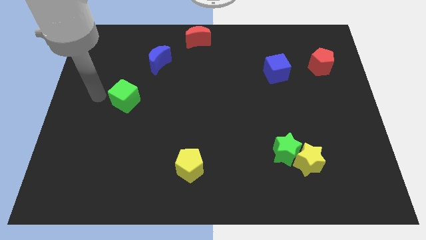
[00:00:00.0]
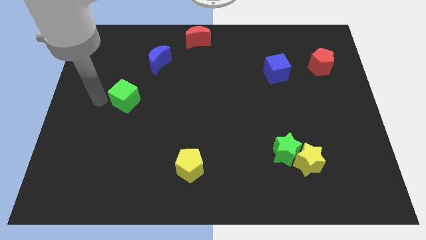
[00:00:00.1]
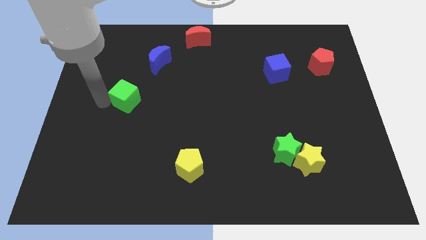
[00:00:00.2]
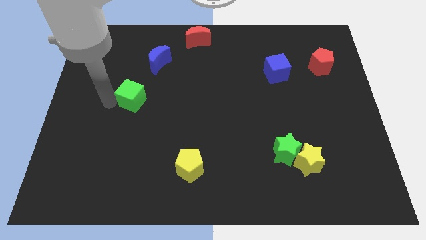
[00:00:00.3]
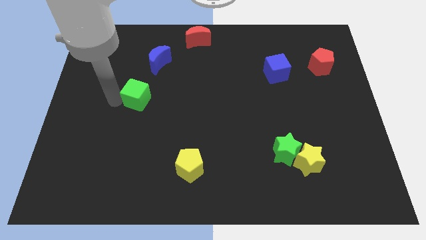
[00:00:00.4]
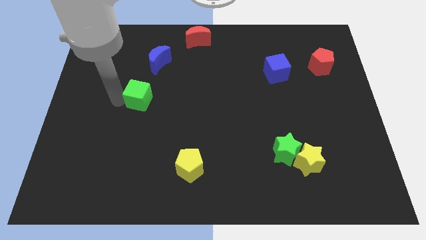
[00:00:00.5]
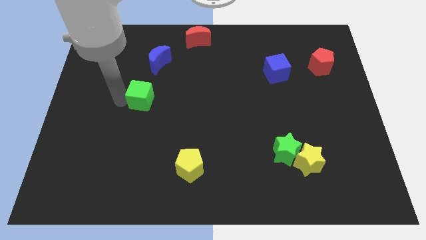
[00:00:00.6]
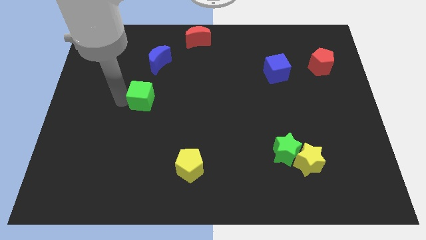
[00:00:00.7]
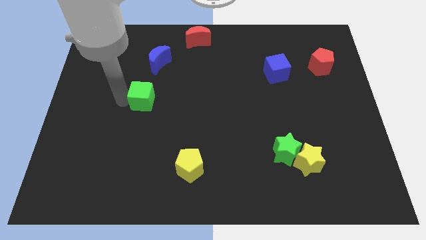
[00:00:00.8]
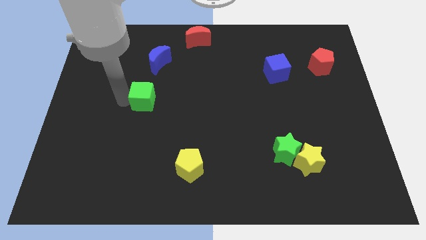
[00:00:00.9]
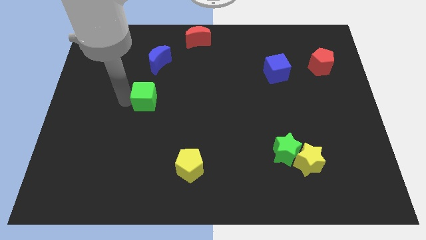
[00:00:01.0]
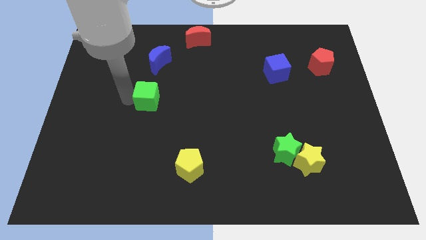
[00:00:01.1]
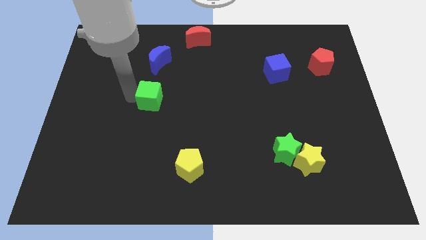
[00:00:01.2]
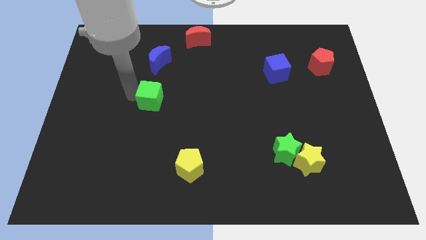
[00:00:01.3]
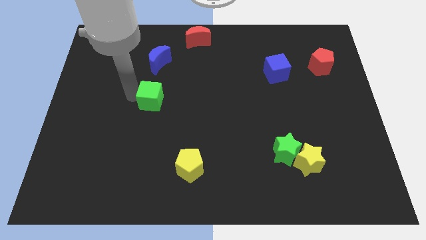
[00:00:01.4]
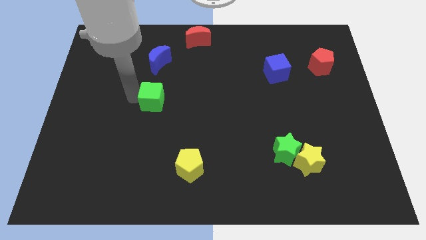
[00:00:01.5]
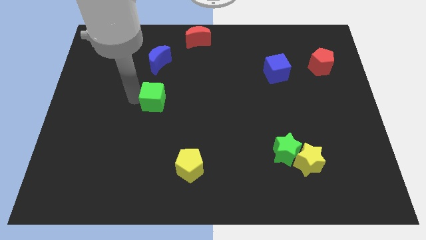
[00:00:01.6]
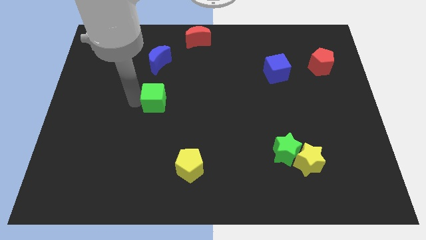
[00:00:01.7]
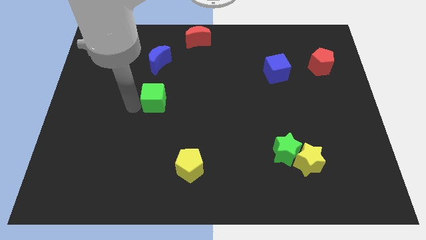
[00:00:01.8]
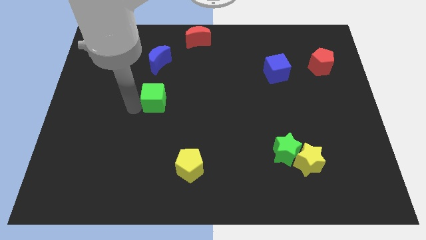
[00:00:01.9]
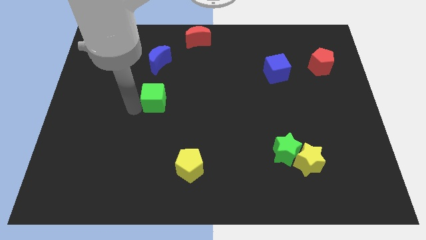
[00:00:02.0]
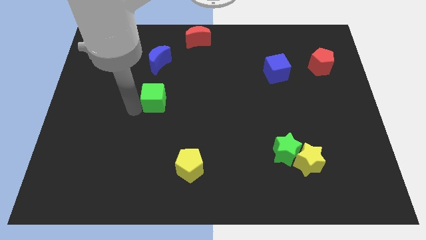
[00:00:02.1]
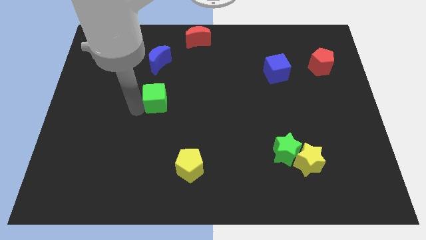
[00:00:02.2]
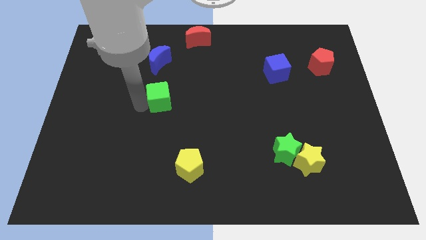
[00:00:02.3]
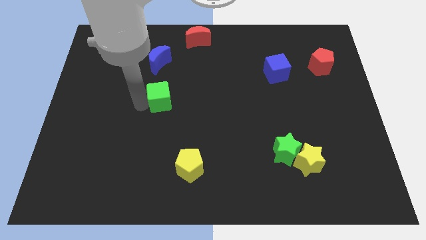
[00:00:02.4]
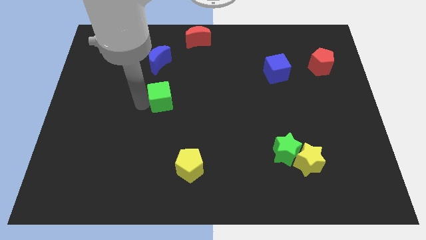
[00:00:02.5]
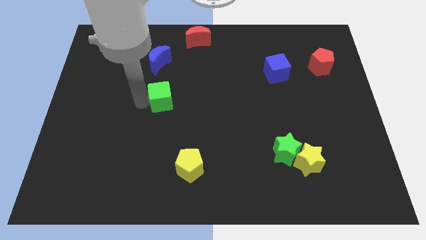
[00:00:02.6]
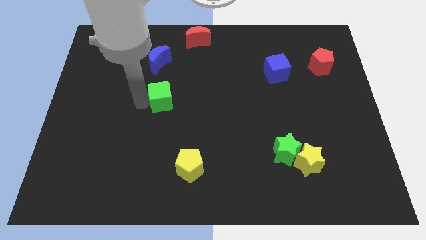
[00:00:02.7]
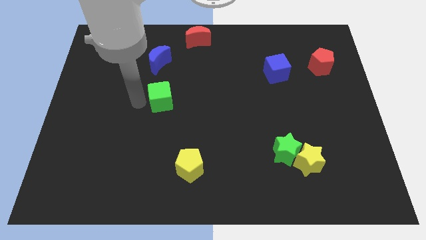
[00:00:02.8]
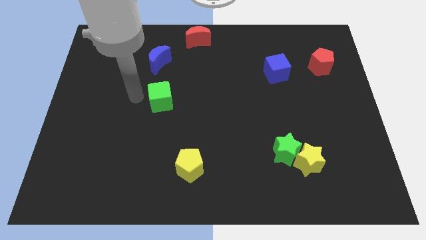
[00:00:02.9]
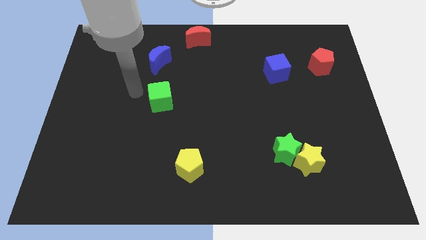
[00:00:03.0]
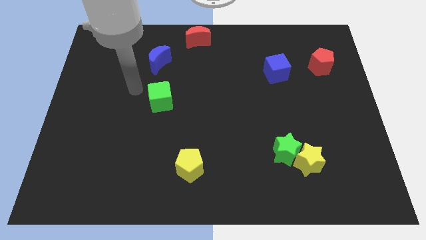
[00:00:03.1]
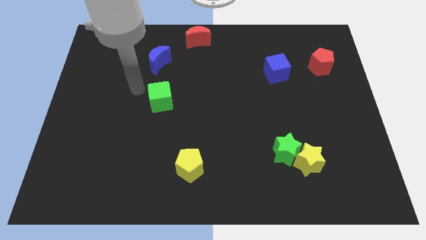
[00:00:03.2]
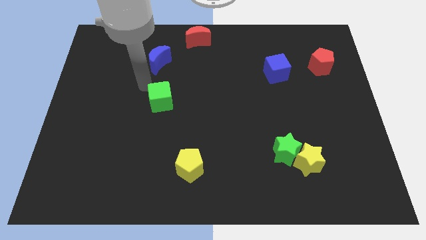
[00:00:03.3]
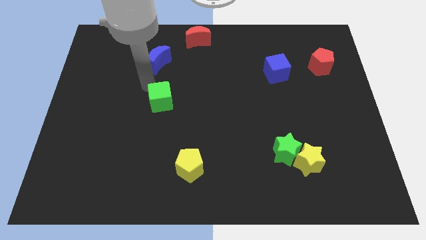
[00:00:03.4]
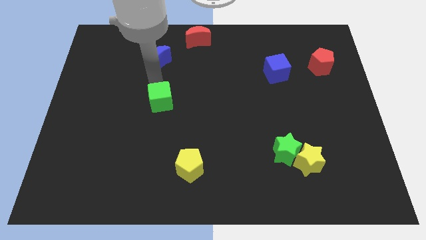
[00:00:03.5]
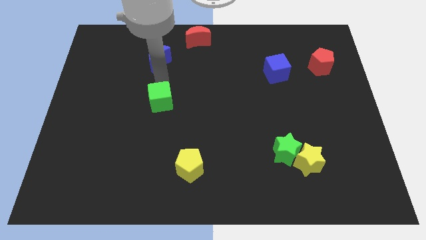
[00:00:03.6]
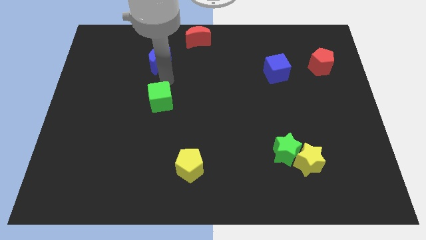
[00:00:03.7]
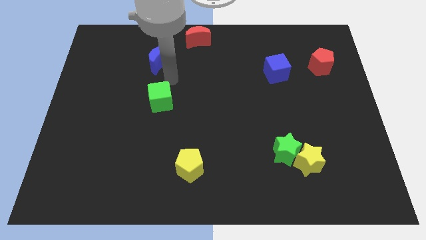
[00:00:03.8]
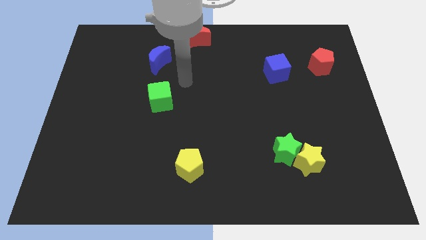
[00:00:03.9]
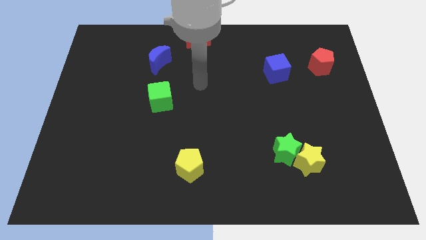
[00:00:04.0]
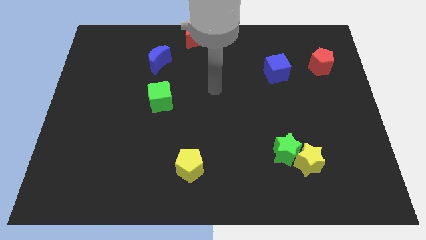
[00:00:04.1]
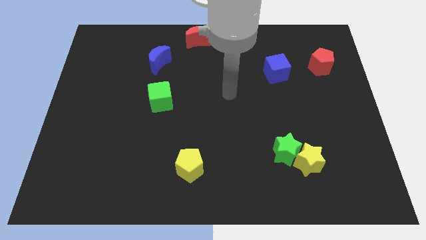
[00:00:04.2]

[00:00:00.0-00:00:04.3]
put the green cube vertically below the blue moon

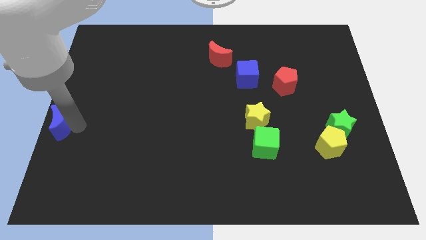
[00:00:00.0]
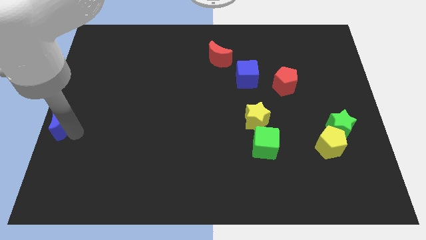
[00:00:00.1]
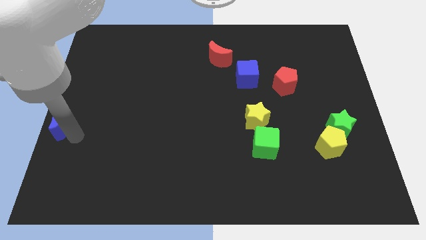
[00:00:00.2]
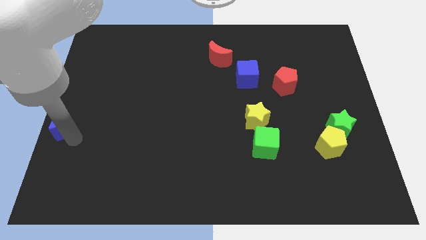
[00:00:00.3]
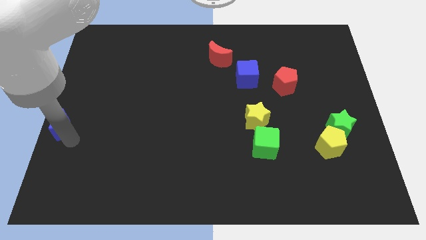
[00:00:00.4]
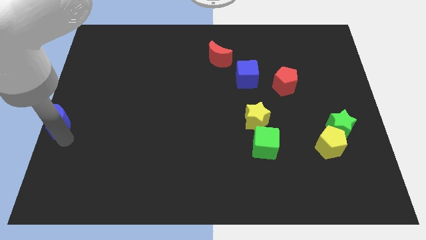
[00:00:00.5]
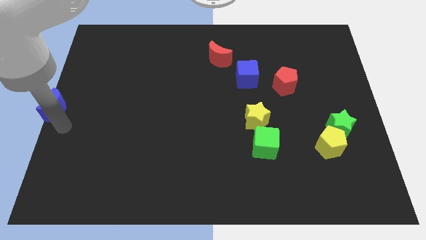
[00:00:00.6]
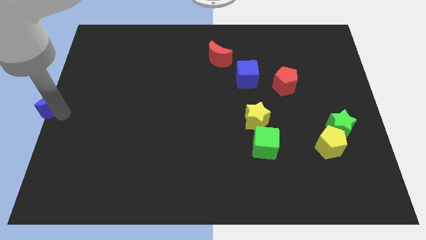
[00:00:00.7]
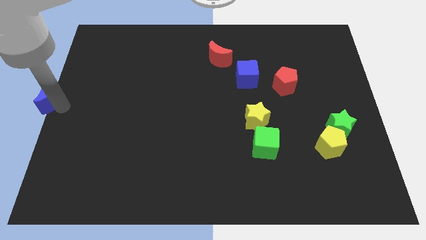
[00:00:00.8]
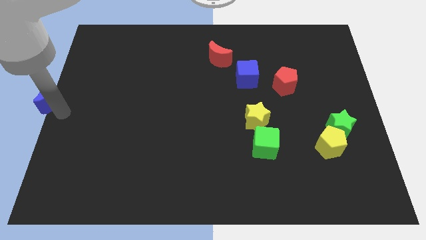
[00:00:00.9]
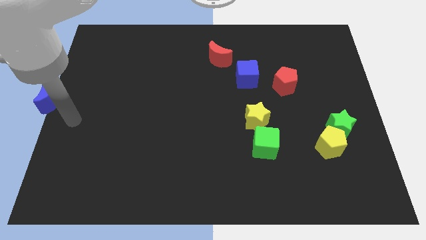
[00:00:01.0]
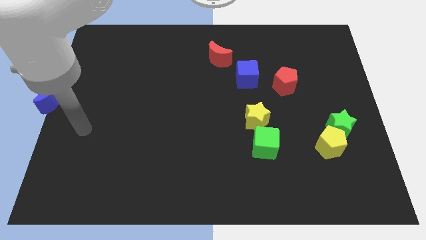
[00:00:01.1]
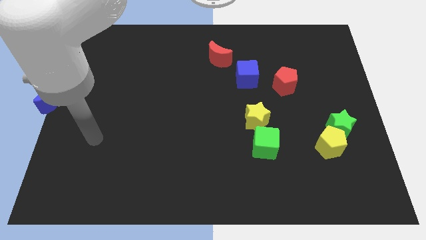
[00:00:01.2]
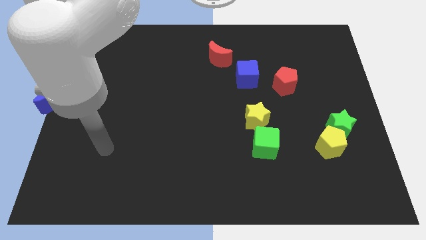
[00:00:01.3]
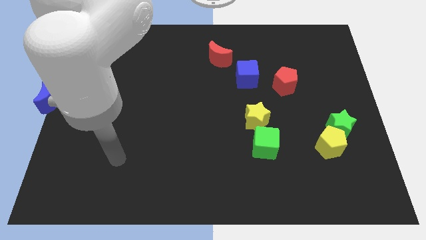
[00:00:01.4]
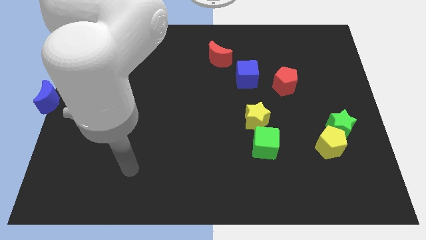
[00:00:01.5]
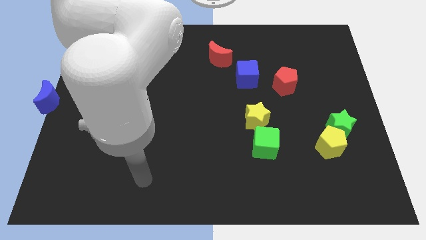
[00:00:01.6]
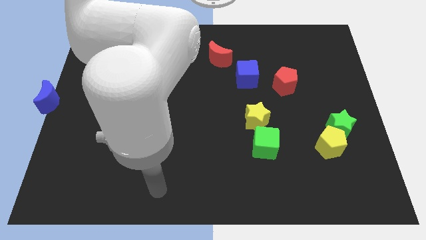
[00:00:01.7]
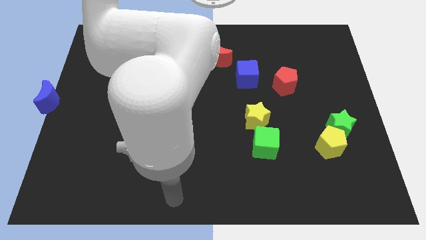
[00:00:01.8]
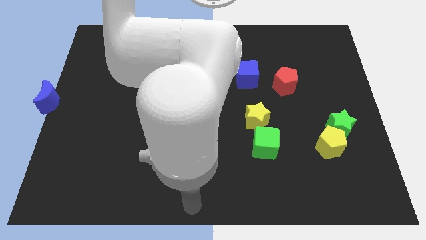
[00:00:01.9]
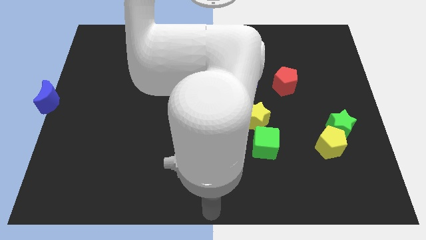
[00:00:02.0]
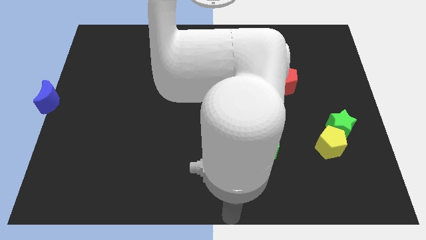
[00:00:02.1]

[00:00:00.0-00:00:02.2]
place your arm to the bottom center

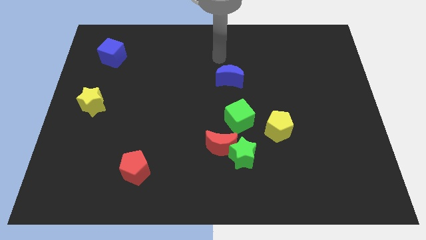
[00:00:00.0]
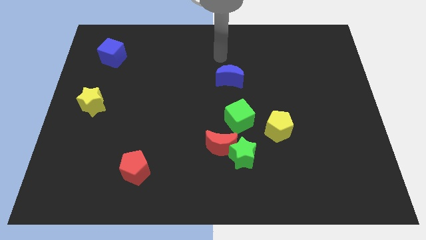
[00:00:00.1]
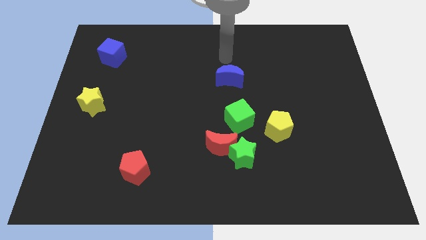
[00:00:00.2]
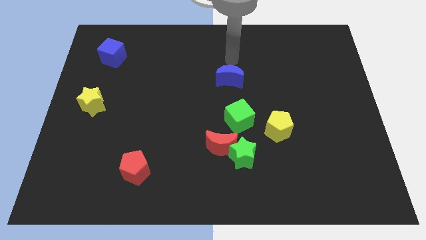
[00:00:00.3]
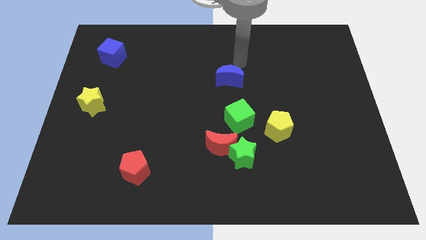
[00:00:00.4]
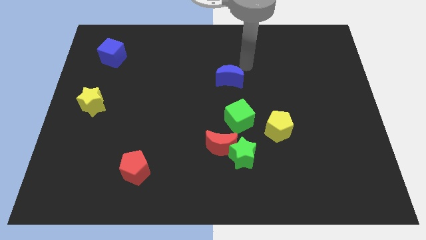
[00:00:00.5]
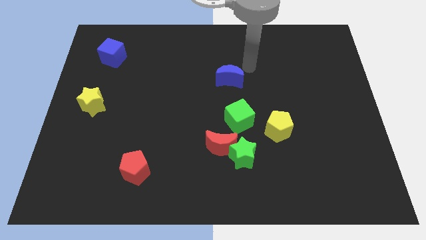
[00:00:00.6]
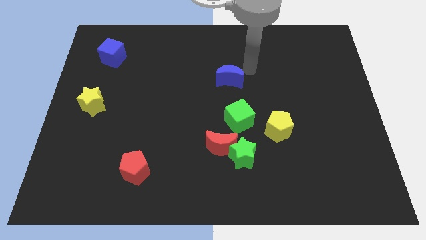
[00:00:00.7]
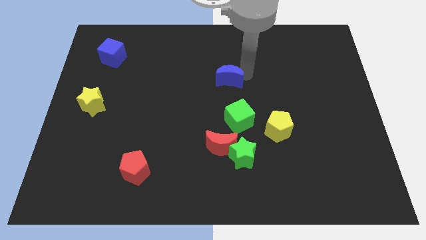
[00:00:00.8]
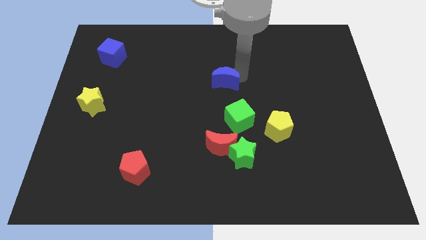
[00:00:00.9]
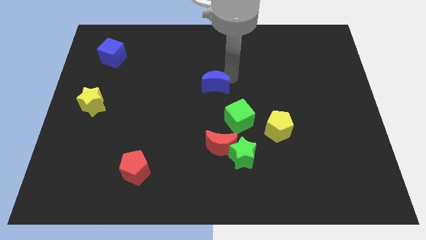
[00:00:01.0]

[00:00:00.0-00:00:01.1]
slide blue moon towards the center

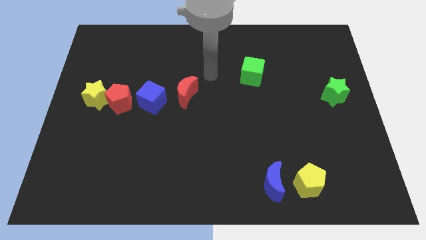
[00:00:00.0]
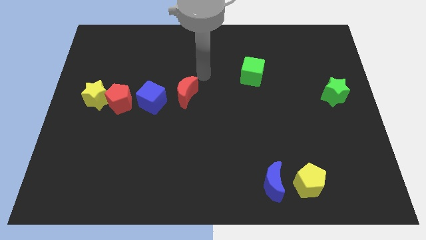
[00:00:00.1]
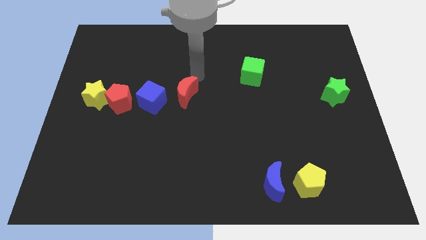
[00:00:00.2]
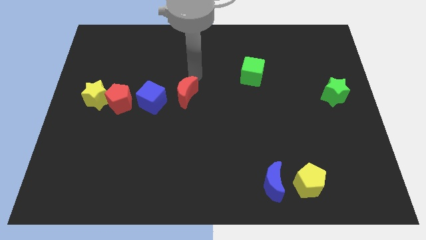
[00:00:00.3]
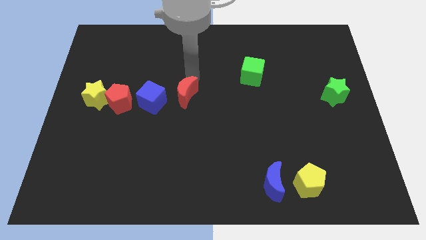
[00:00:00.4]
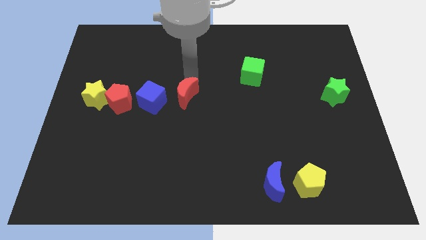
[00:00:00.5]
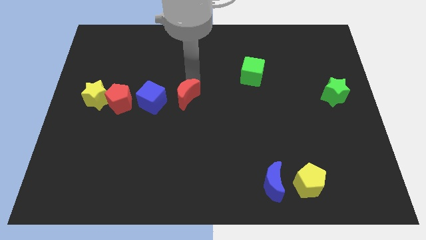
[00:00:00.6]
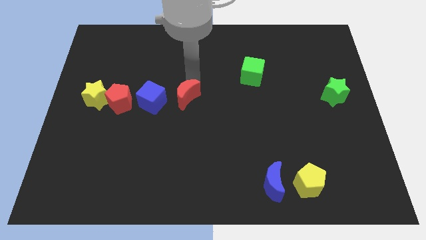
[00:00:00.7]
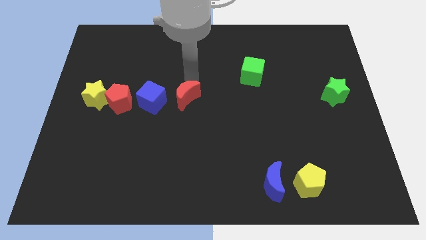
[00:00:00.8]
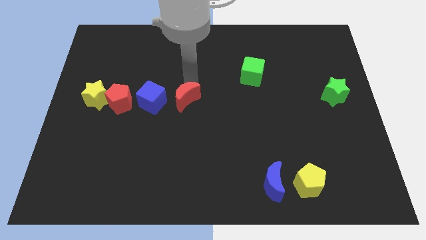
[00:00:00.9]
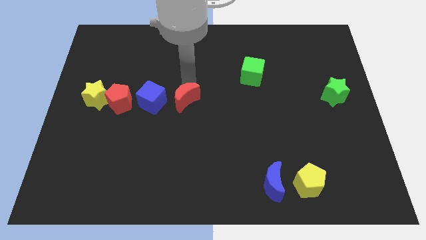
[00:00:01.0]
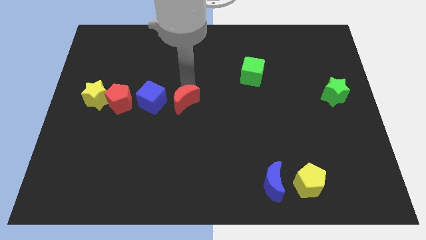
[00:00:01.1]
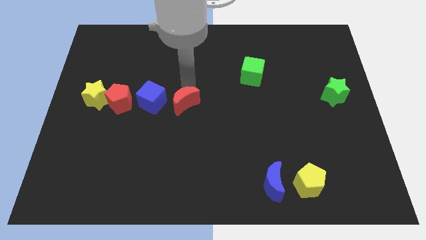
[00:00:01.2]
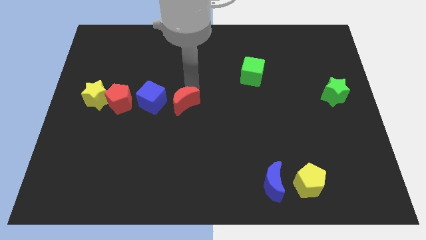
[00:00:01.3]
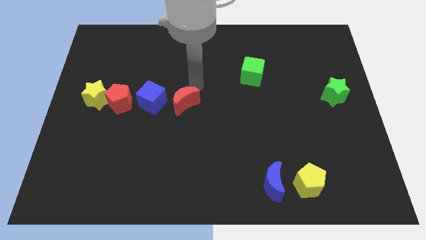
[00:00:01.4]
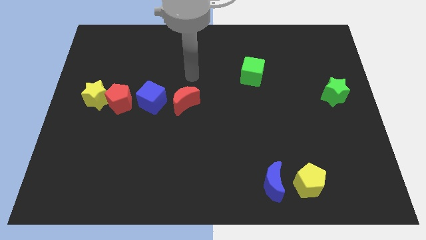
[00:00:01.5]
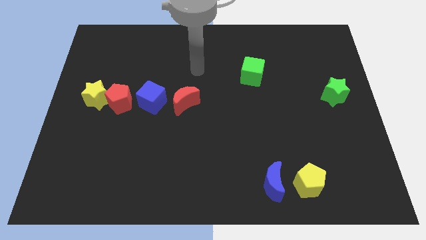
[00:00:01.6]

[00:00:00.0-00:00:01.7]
slightly touch down the red moon
